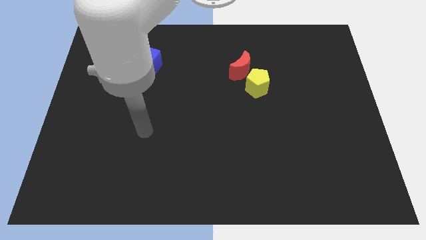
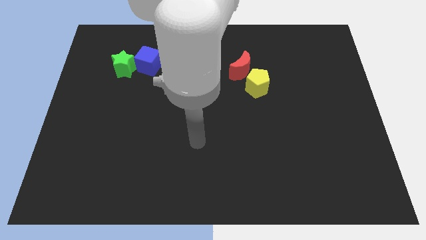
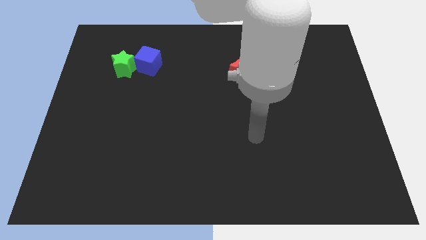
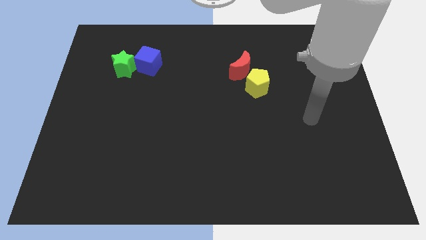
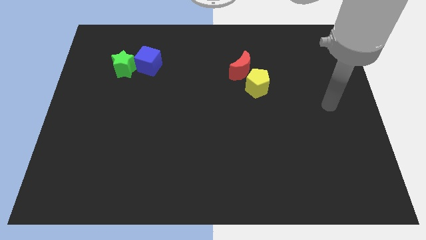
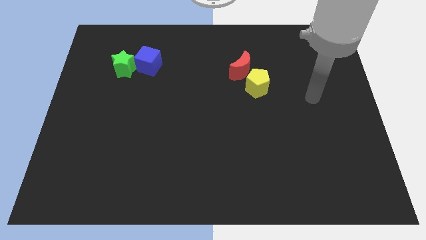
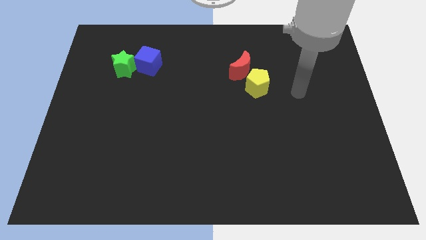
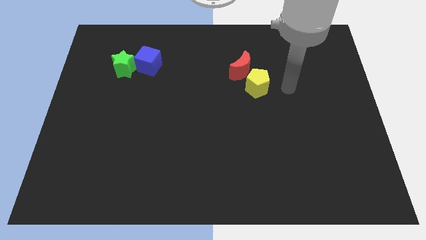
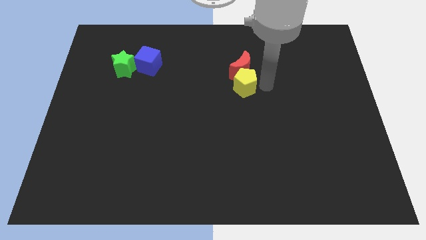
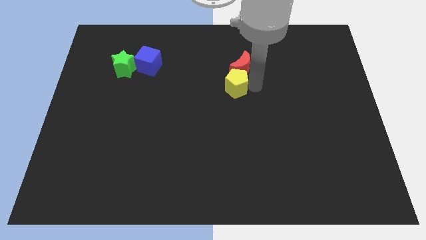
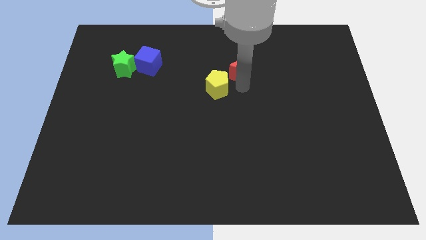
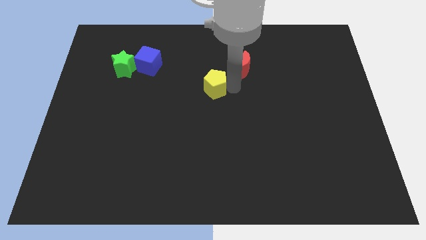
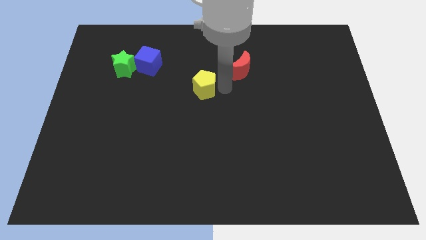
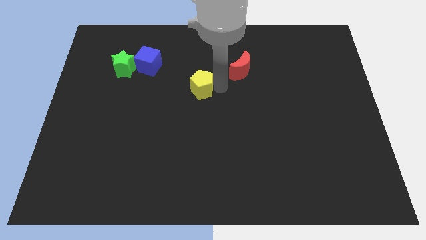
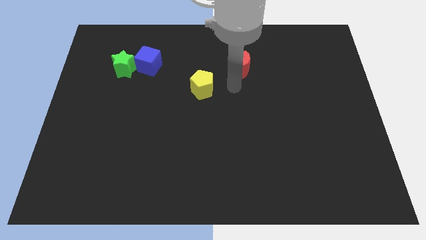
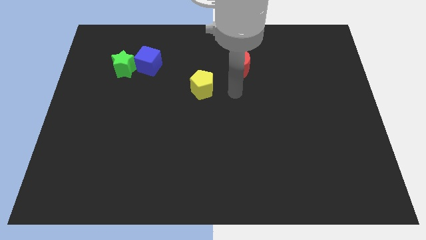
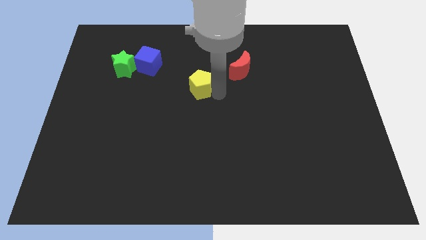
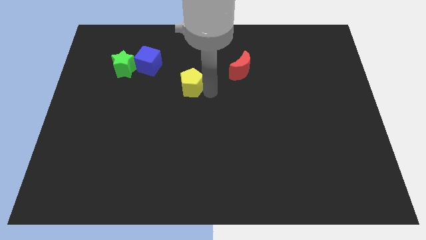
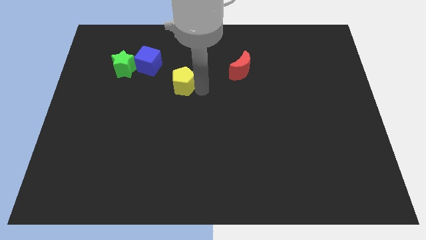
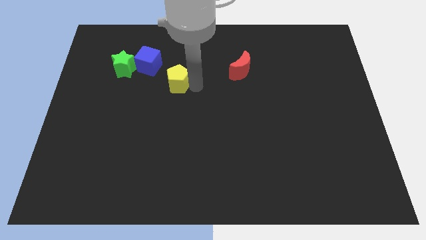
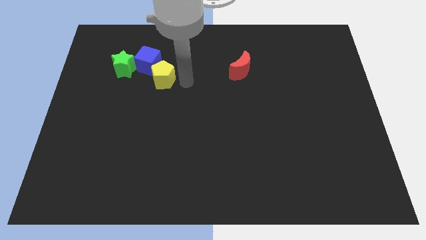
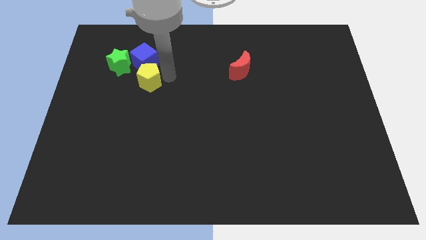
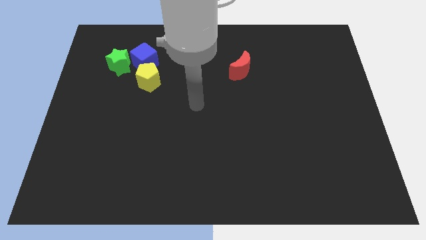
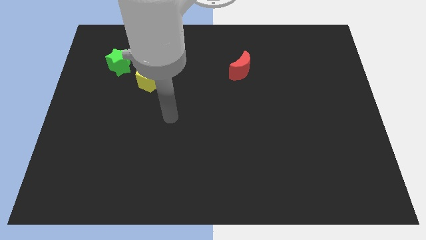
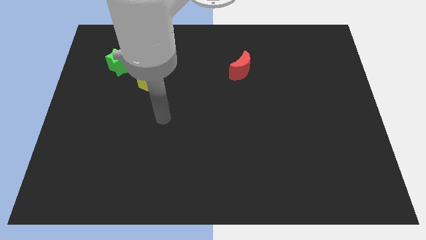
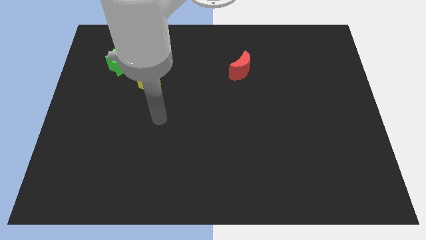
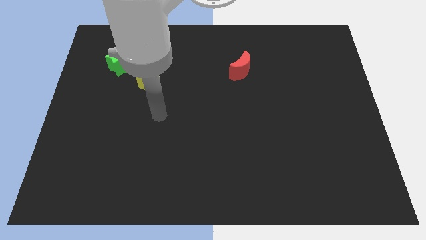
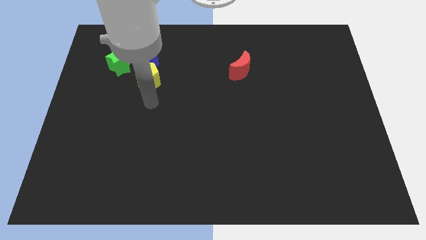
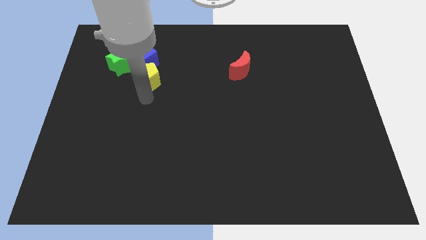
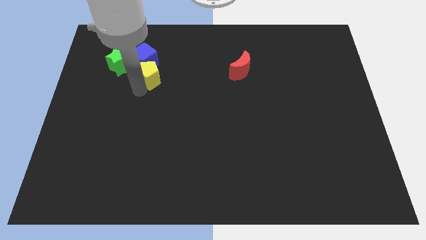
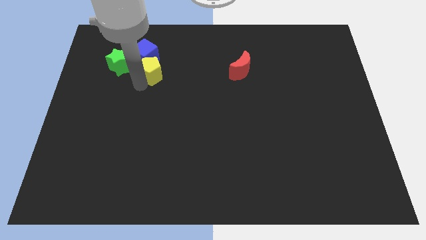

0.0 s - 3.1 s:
move the yellow pentagon close to the blue cube

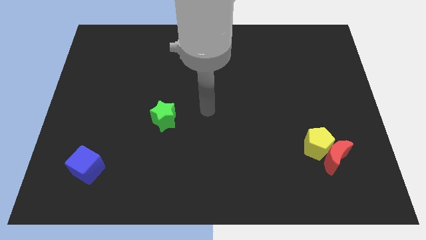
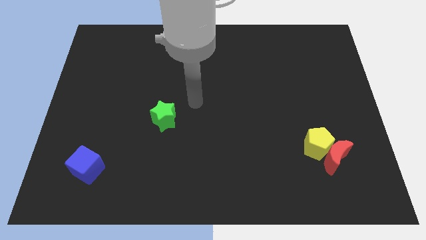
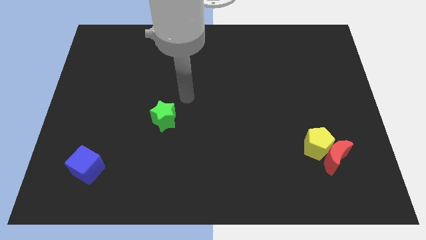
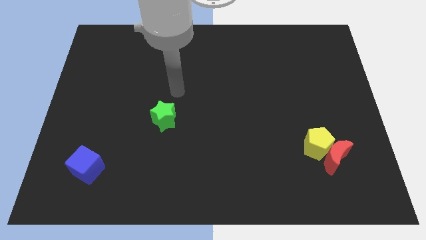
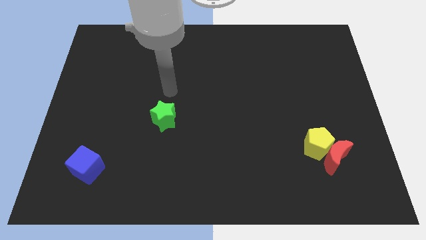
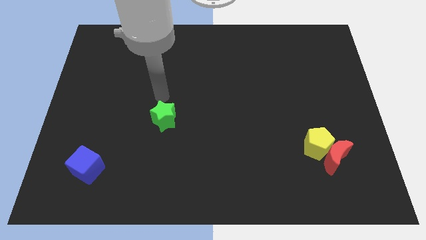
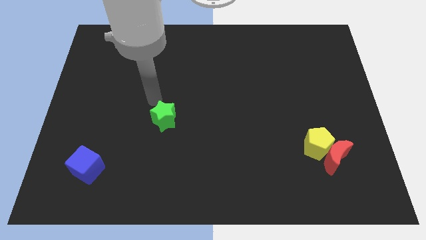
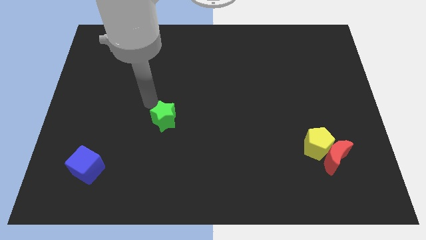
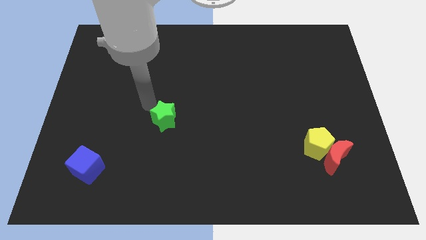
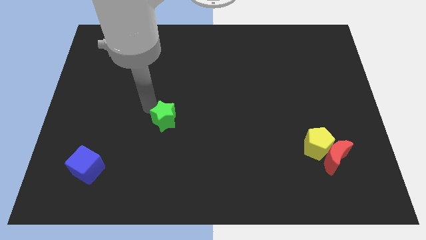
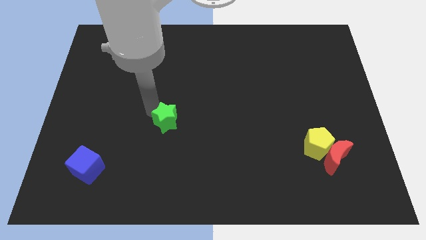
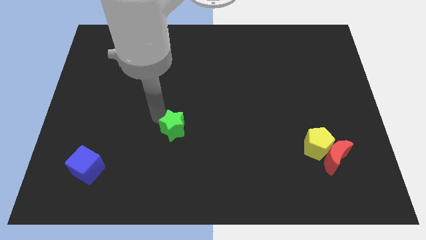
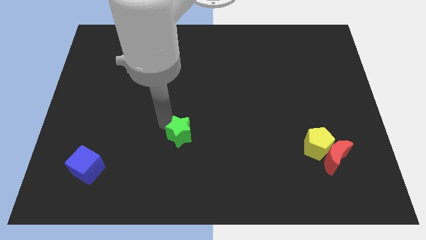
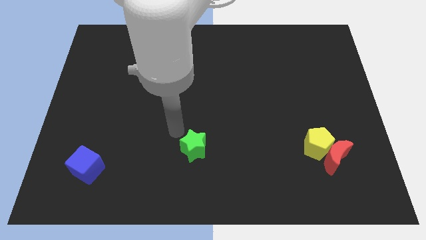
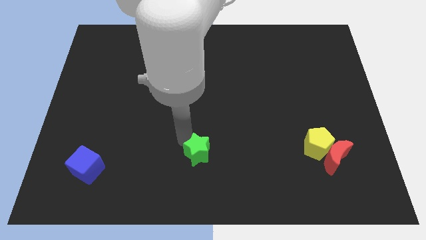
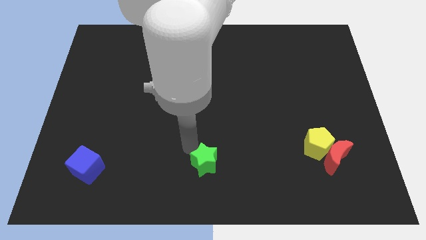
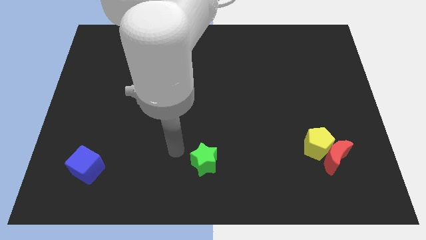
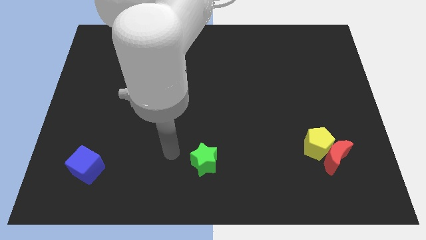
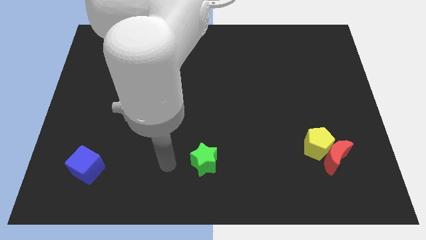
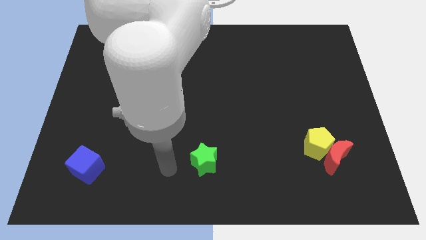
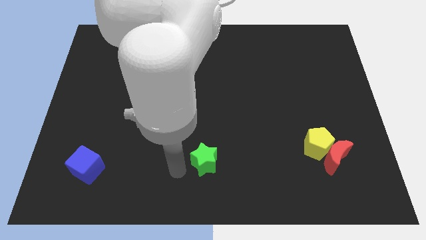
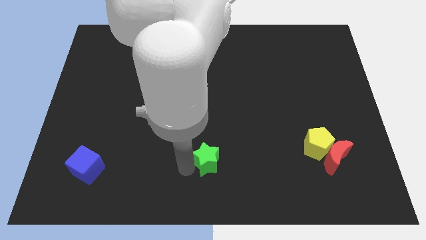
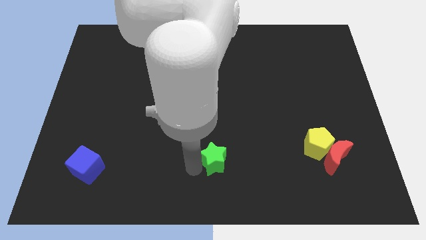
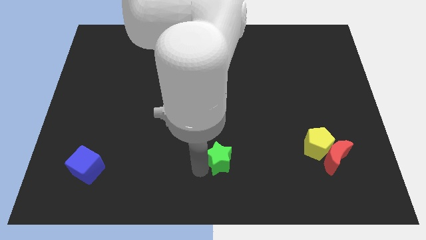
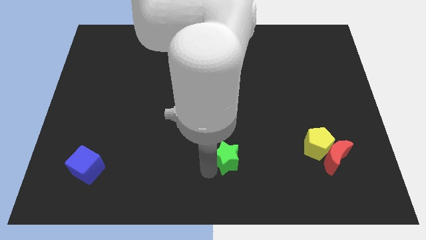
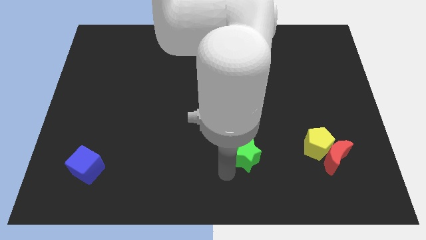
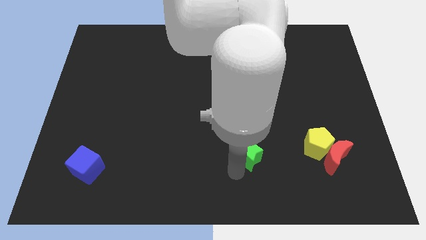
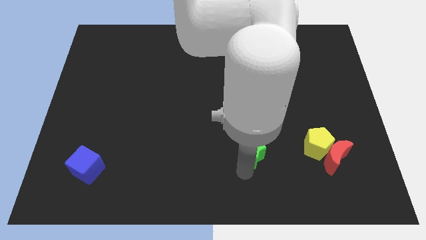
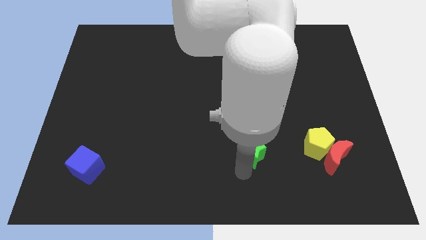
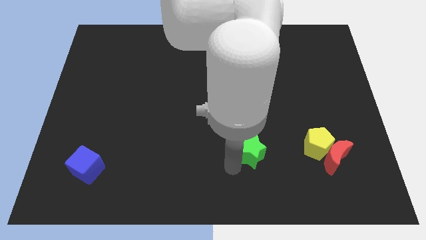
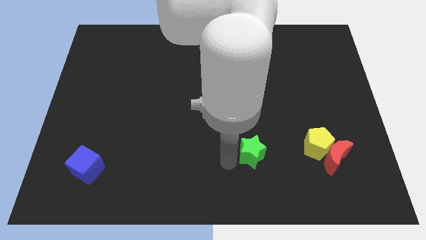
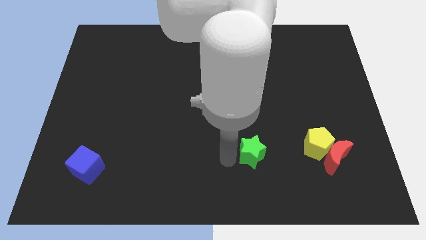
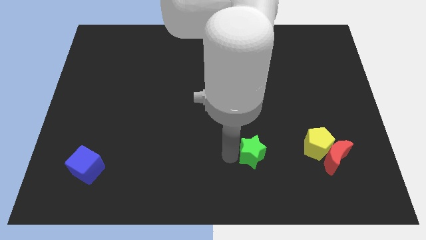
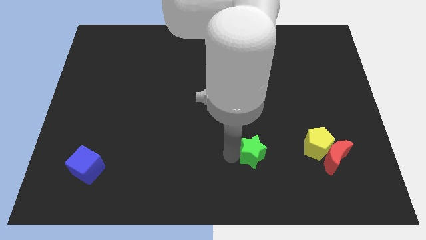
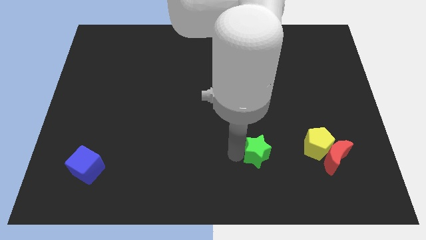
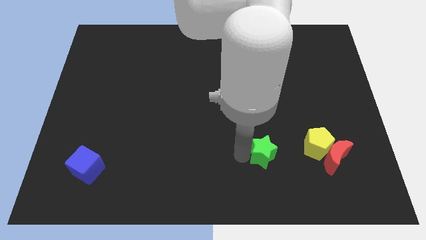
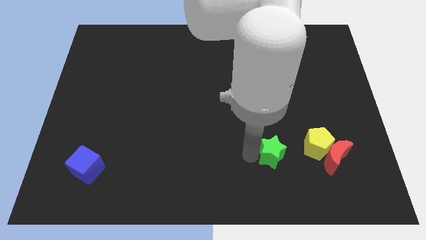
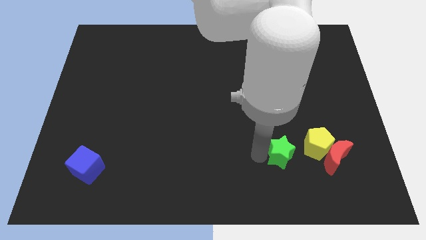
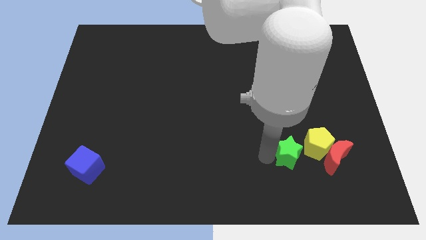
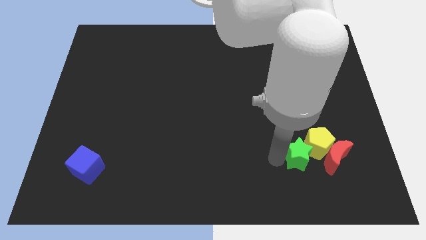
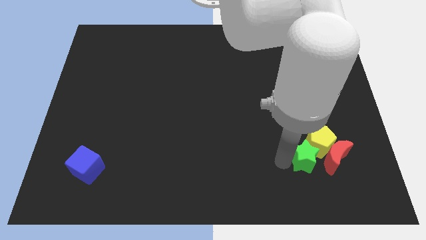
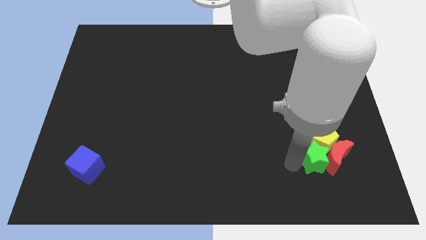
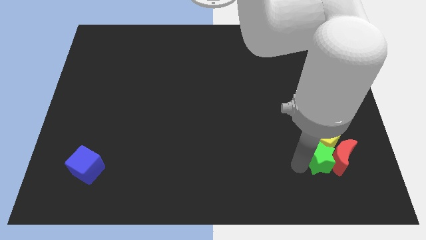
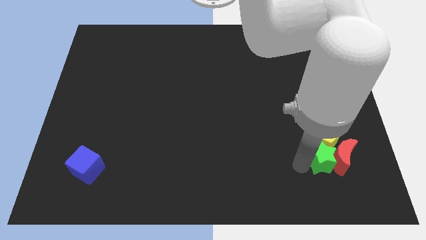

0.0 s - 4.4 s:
slide the green block towards the red block

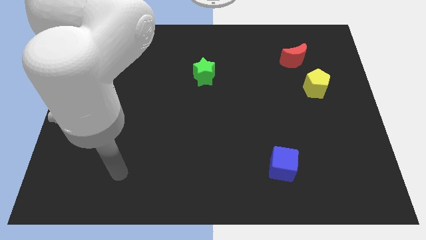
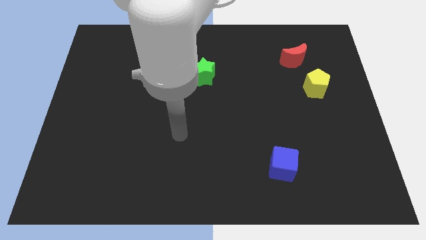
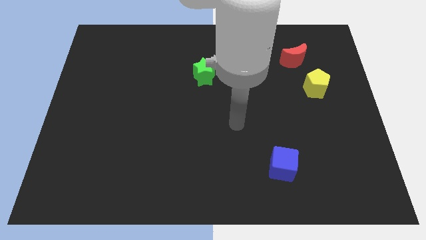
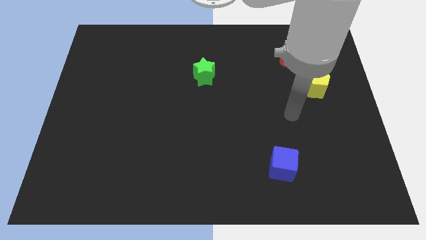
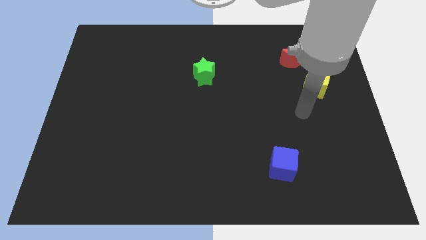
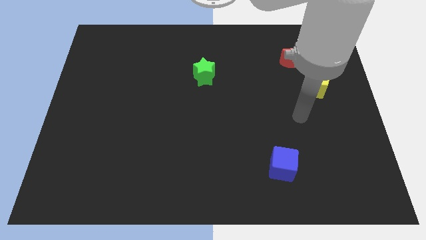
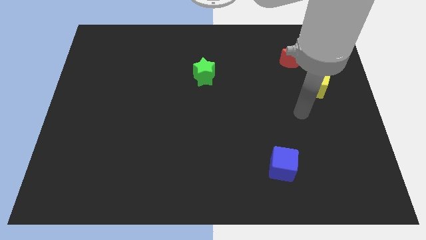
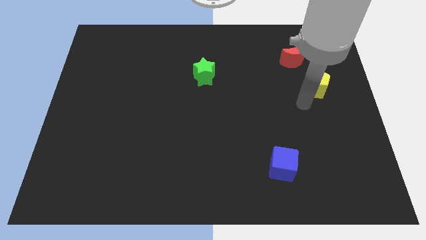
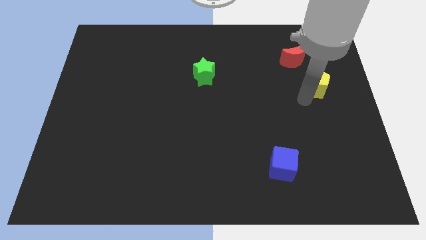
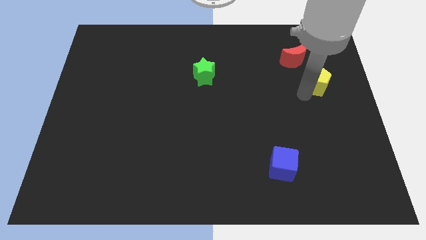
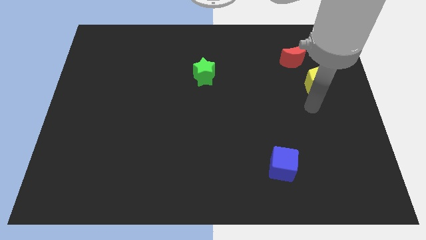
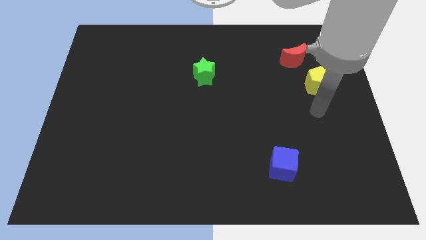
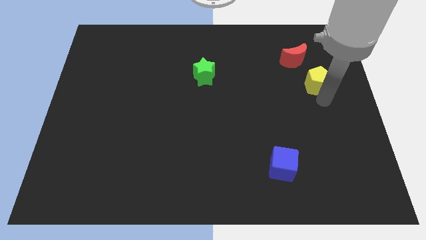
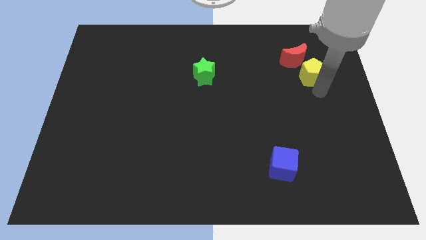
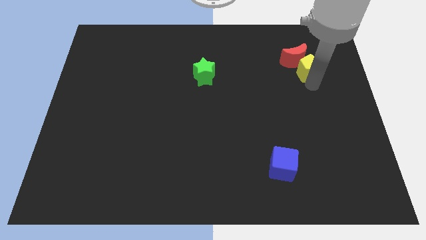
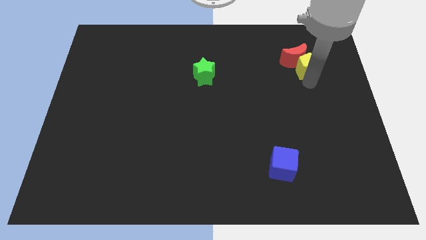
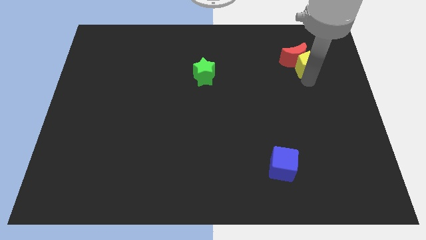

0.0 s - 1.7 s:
push the pentagon next to the red moon
